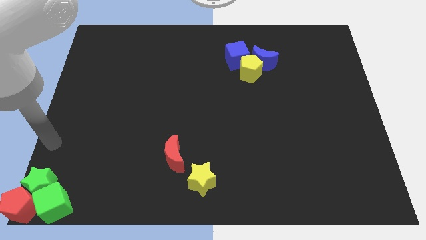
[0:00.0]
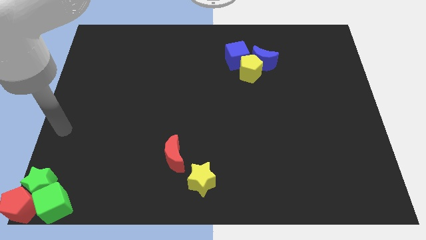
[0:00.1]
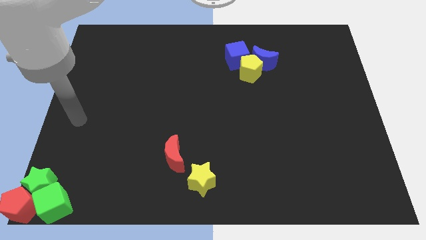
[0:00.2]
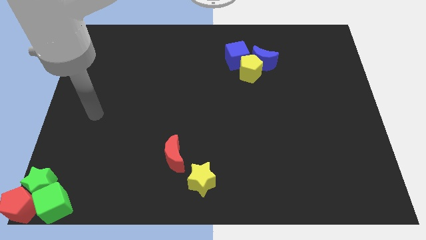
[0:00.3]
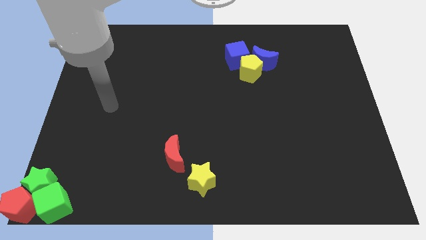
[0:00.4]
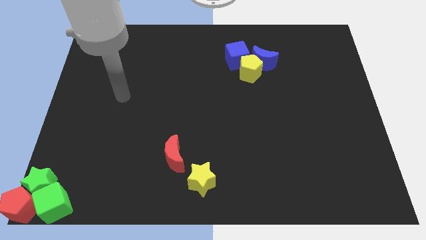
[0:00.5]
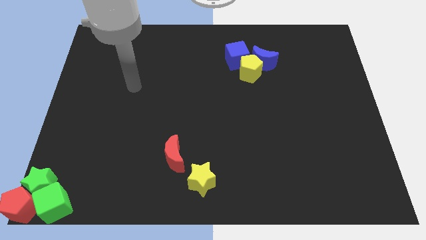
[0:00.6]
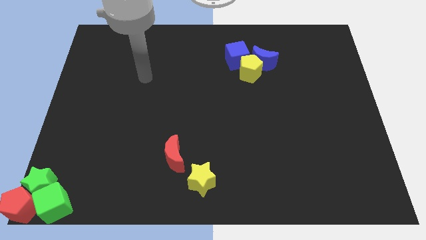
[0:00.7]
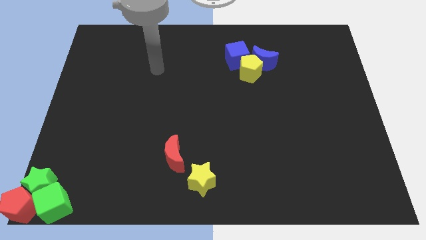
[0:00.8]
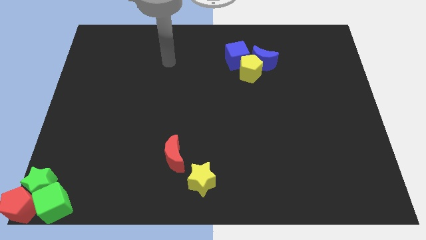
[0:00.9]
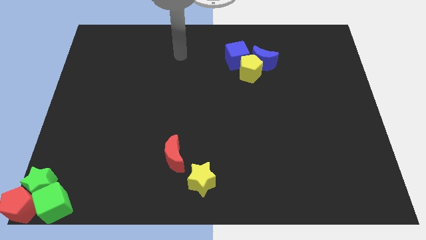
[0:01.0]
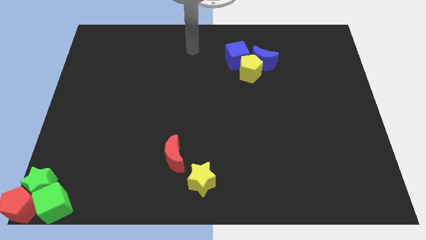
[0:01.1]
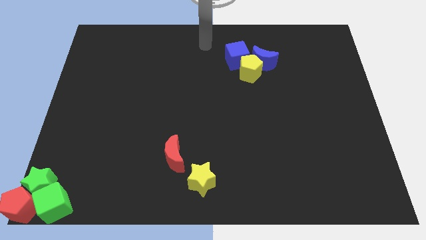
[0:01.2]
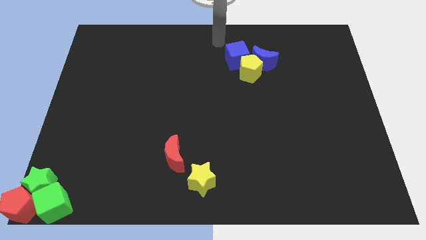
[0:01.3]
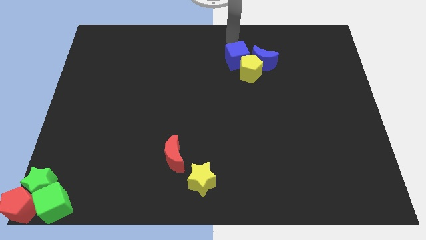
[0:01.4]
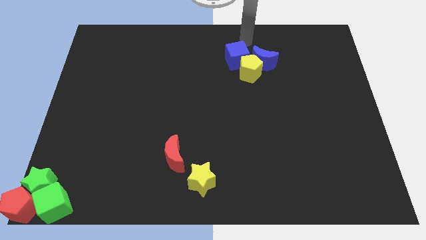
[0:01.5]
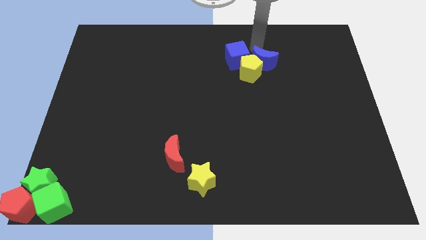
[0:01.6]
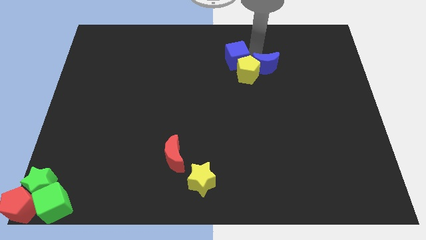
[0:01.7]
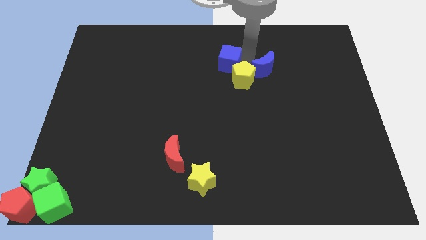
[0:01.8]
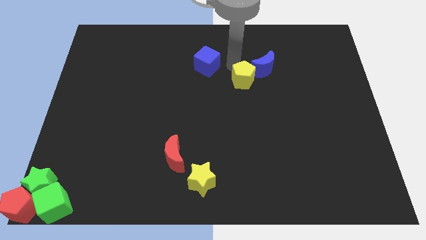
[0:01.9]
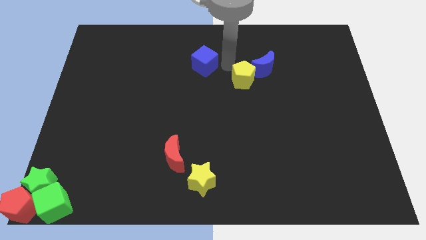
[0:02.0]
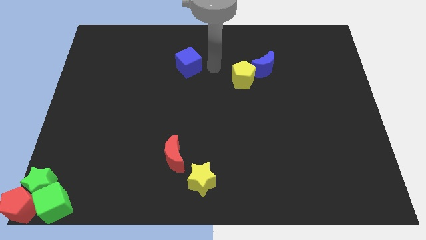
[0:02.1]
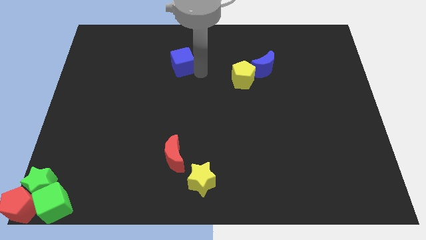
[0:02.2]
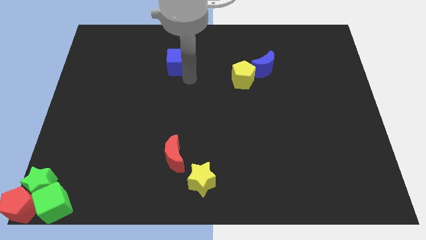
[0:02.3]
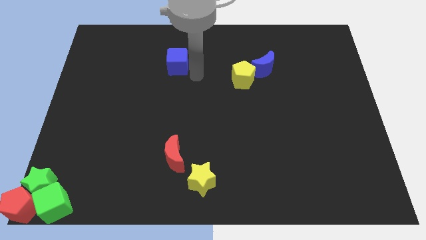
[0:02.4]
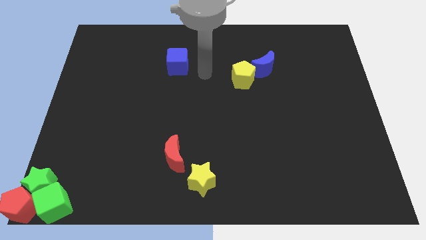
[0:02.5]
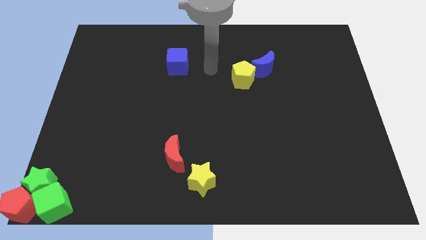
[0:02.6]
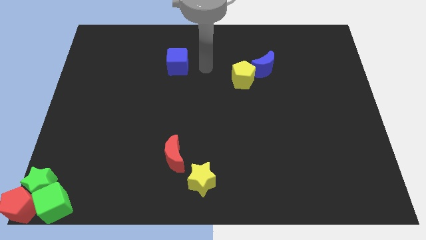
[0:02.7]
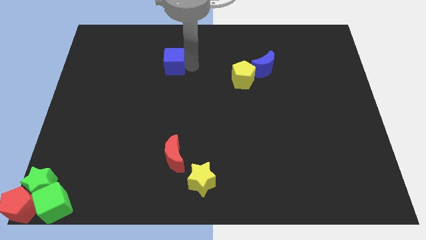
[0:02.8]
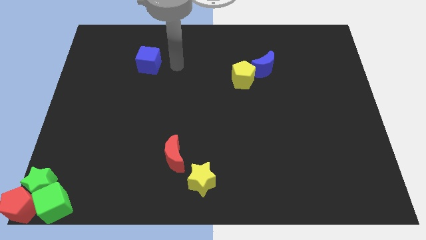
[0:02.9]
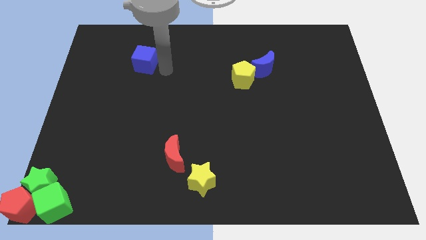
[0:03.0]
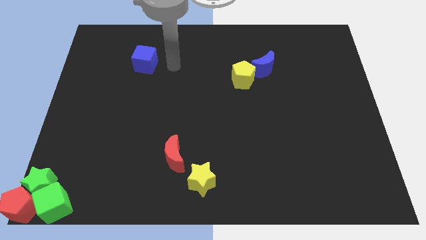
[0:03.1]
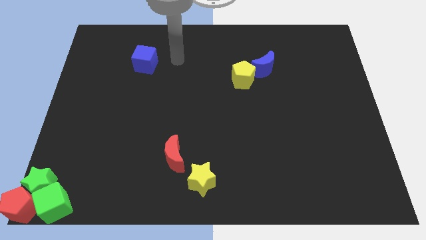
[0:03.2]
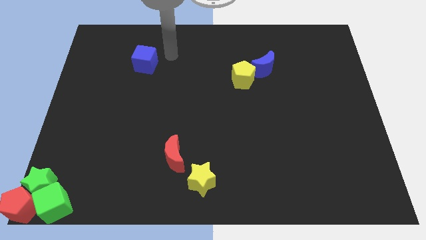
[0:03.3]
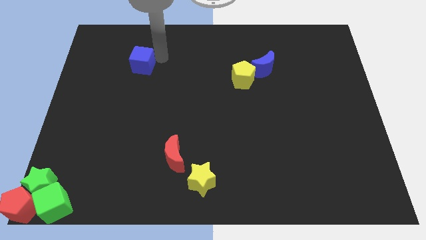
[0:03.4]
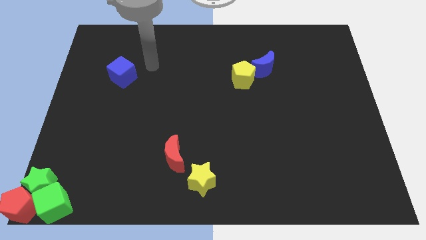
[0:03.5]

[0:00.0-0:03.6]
push the blue cube to the left of the board

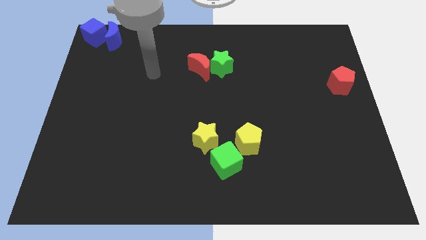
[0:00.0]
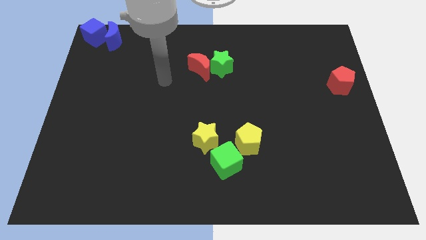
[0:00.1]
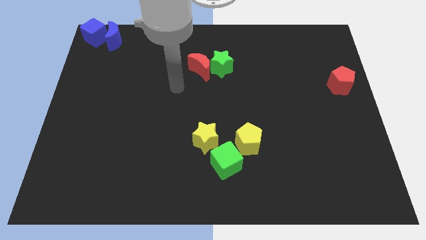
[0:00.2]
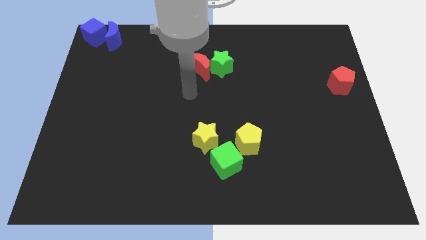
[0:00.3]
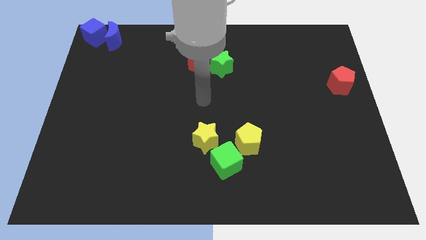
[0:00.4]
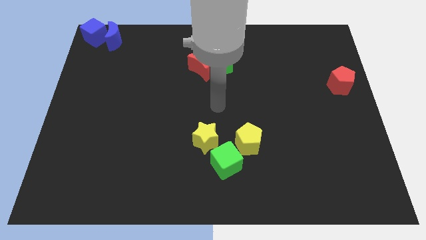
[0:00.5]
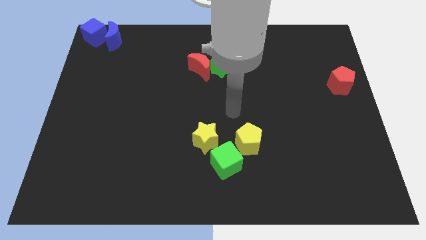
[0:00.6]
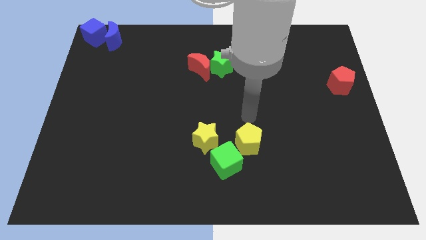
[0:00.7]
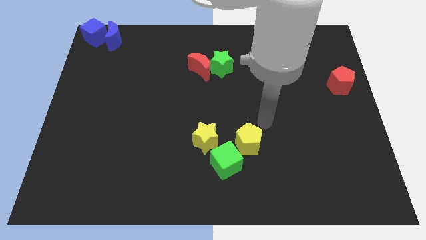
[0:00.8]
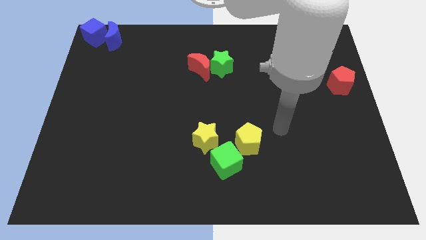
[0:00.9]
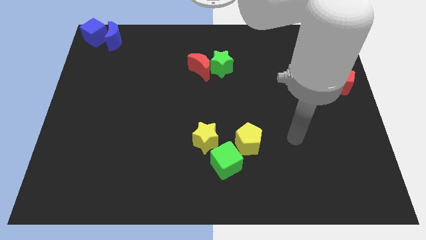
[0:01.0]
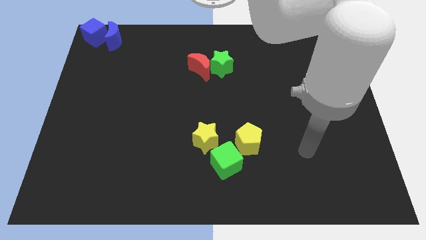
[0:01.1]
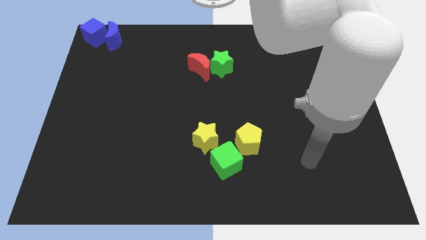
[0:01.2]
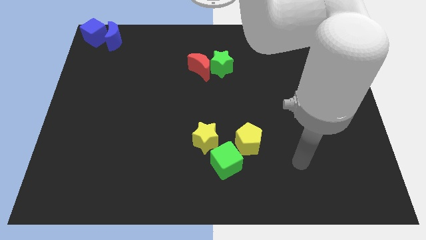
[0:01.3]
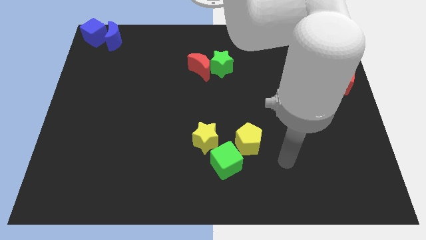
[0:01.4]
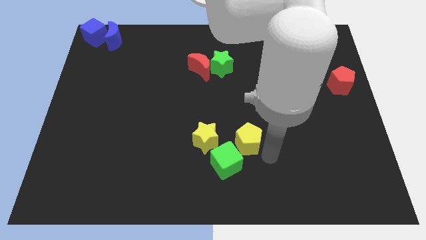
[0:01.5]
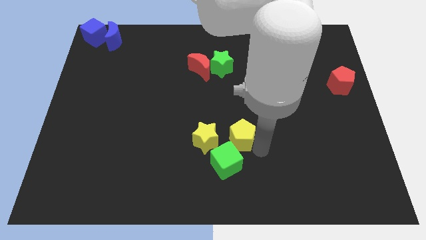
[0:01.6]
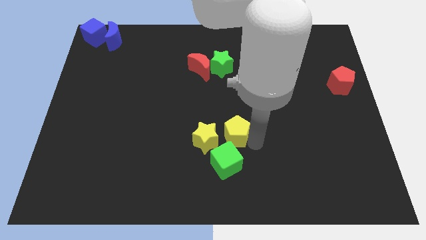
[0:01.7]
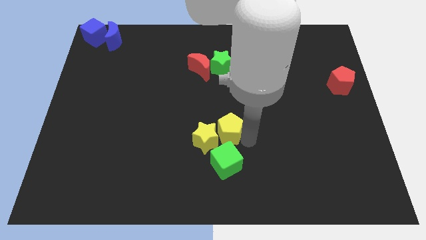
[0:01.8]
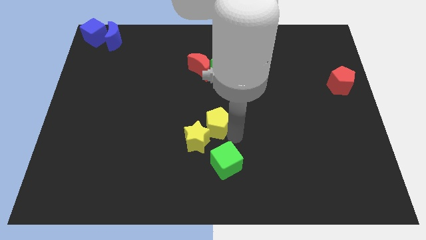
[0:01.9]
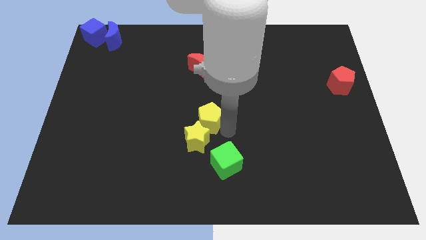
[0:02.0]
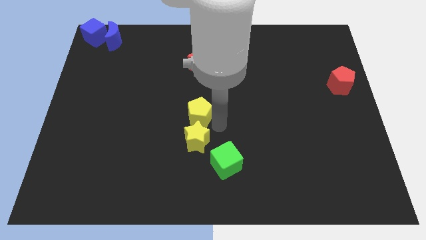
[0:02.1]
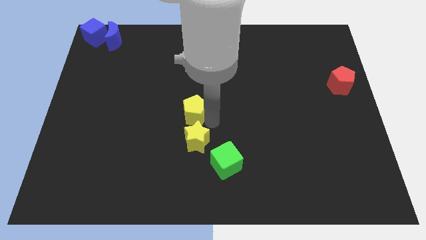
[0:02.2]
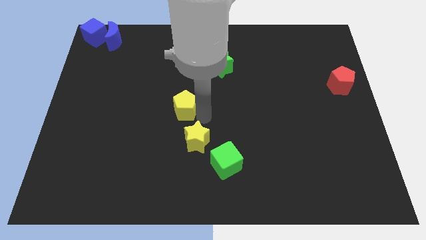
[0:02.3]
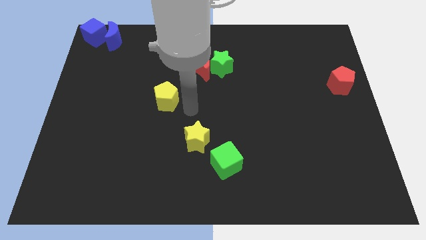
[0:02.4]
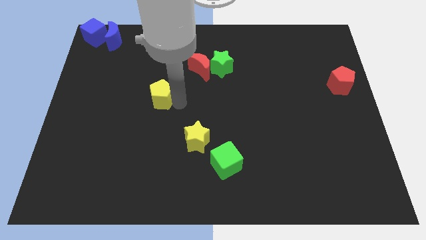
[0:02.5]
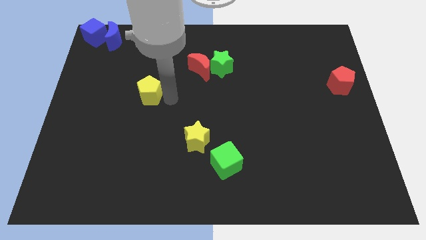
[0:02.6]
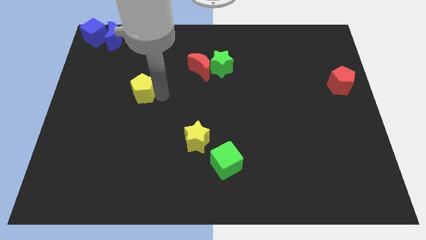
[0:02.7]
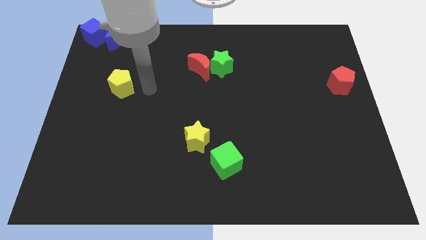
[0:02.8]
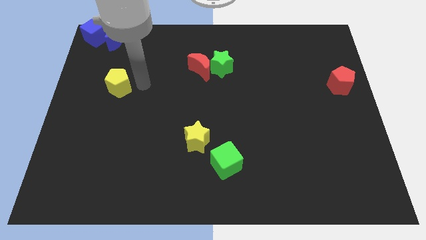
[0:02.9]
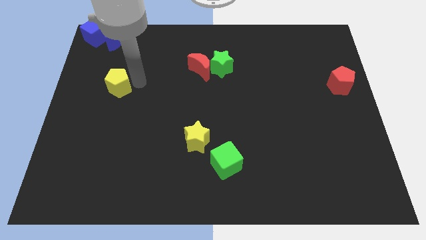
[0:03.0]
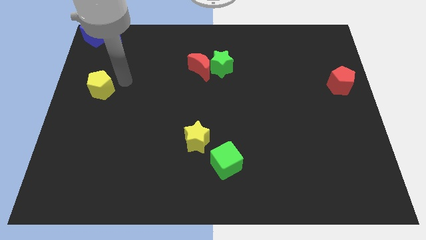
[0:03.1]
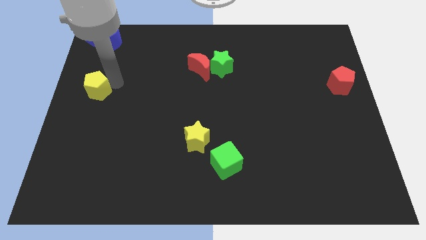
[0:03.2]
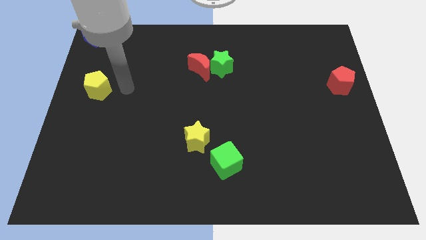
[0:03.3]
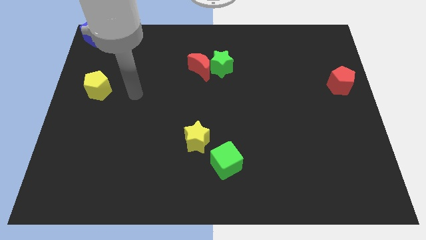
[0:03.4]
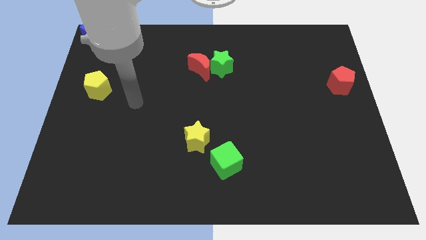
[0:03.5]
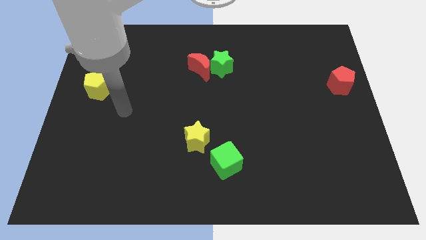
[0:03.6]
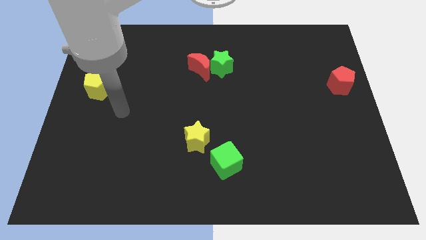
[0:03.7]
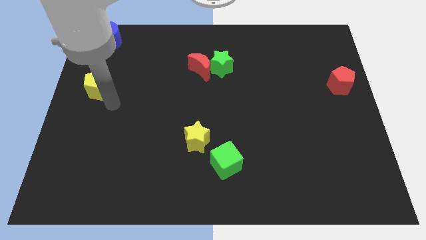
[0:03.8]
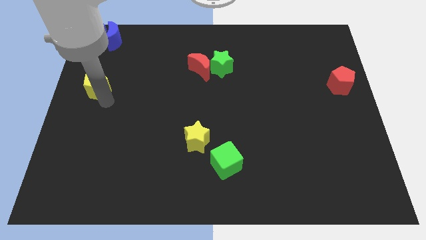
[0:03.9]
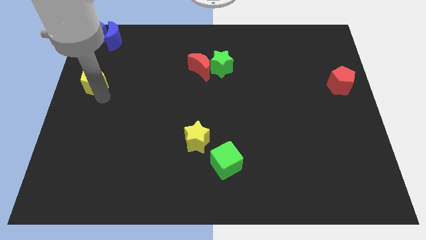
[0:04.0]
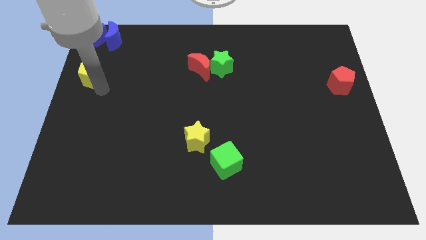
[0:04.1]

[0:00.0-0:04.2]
move the yellow pentagon to the left side of the board

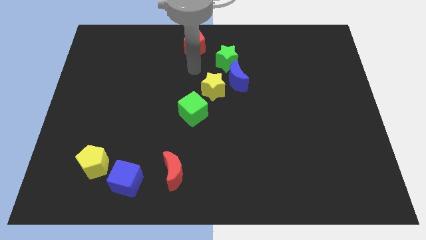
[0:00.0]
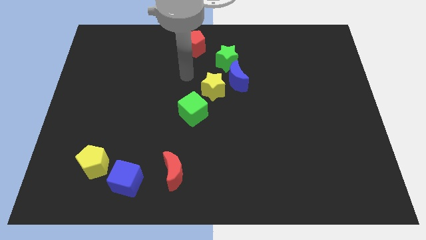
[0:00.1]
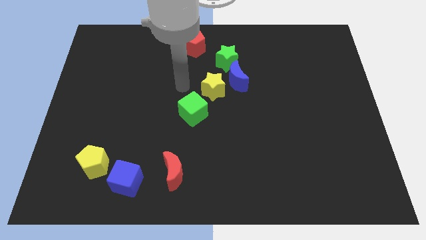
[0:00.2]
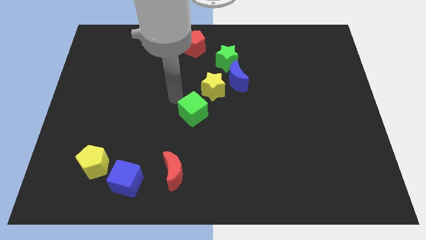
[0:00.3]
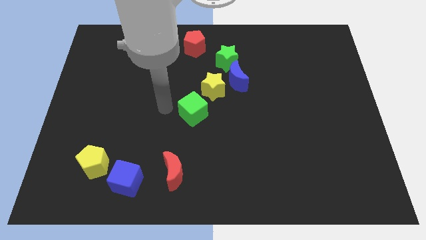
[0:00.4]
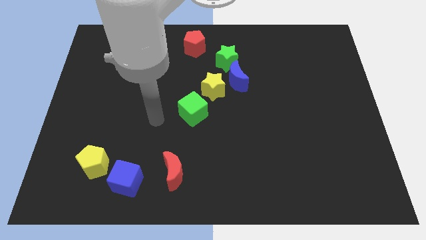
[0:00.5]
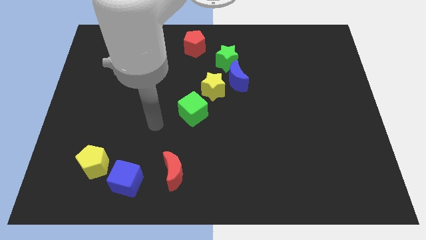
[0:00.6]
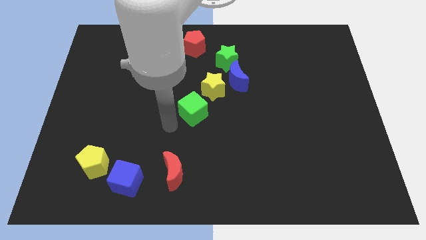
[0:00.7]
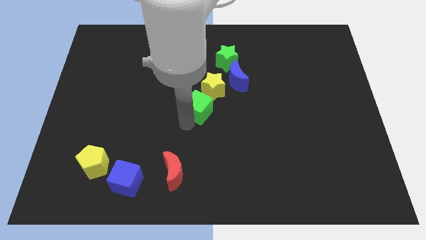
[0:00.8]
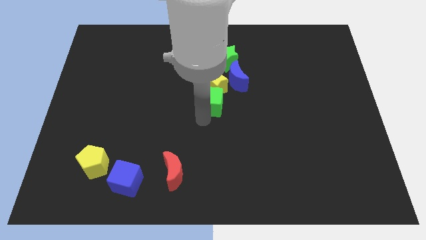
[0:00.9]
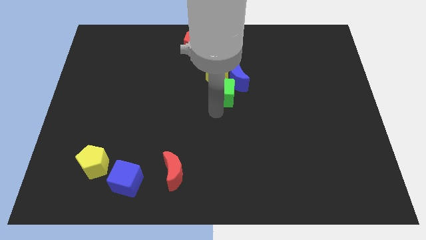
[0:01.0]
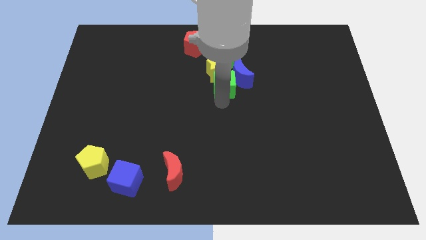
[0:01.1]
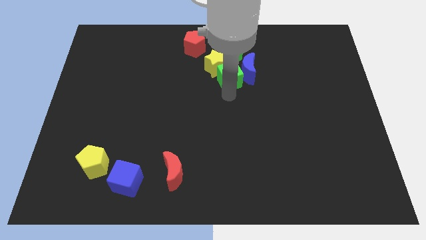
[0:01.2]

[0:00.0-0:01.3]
push green cube into the yellow star
